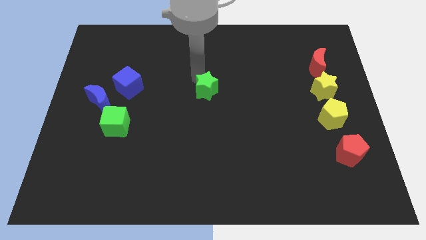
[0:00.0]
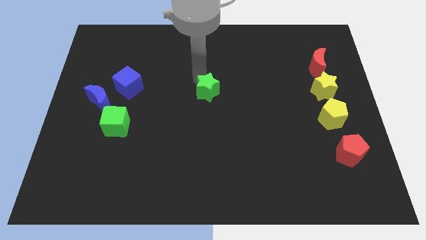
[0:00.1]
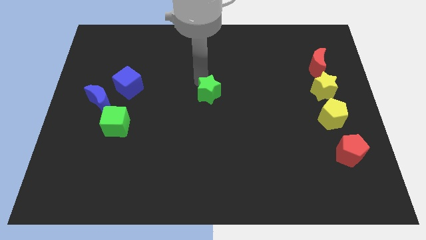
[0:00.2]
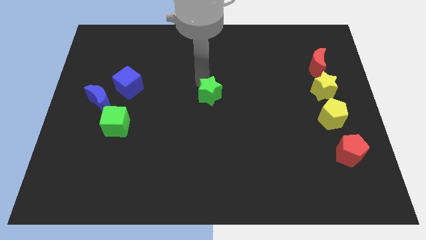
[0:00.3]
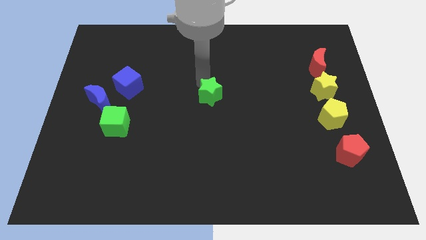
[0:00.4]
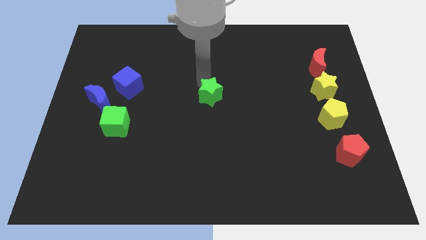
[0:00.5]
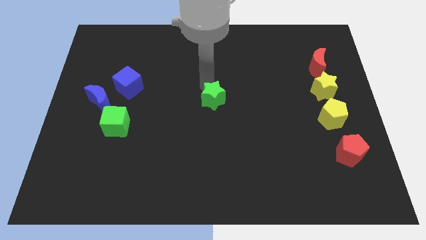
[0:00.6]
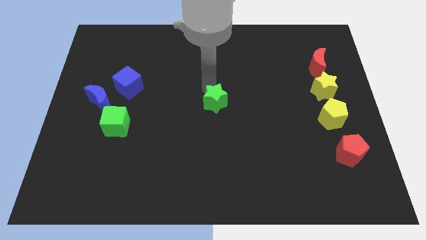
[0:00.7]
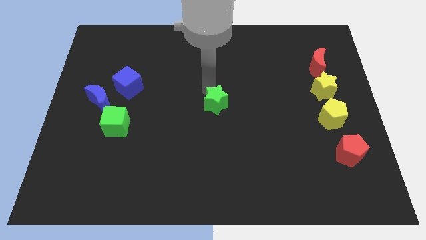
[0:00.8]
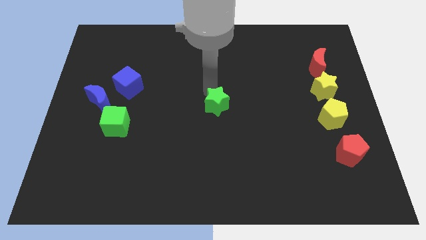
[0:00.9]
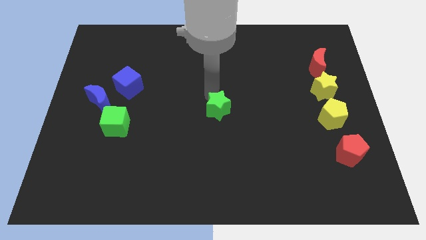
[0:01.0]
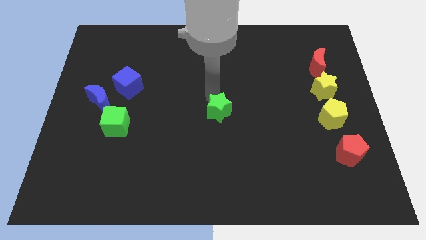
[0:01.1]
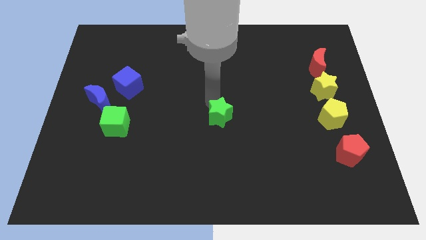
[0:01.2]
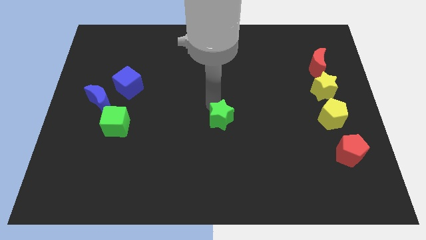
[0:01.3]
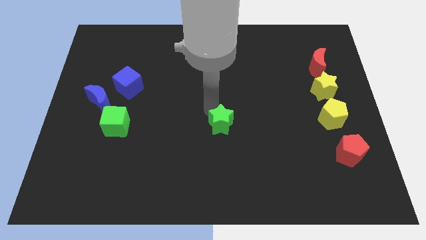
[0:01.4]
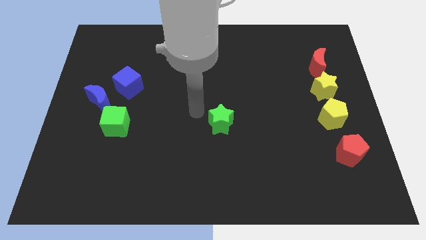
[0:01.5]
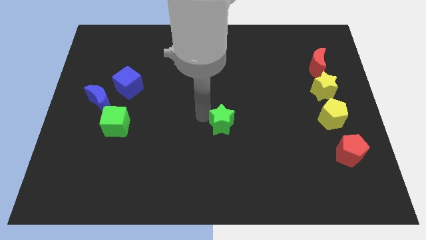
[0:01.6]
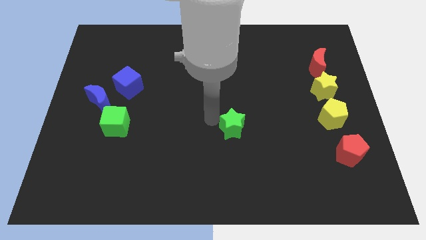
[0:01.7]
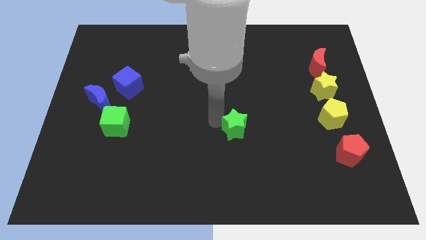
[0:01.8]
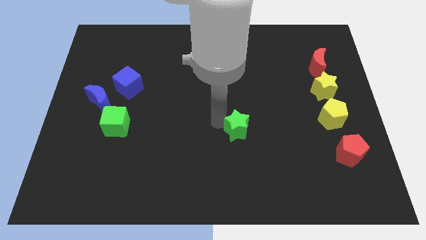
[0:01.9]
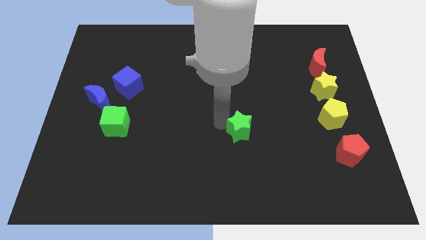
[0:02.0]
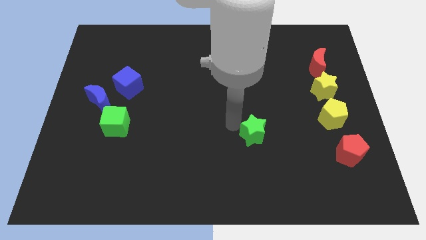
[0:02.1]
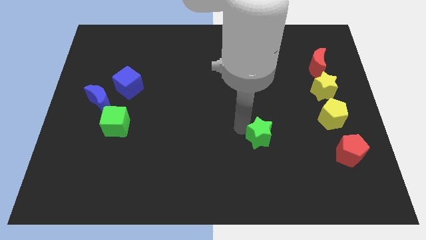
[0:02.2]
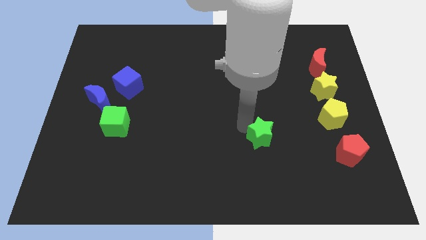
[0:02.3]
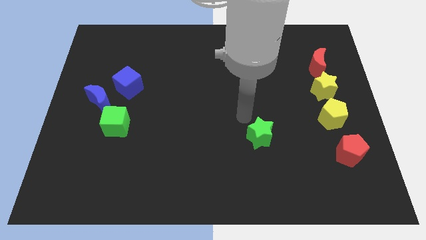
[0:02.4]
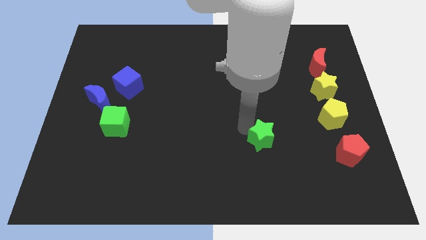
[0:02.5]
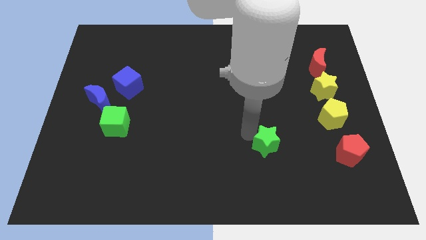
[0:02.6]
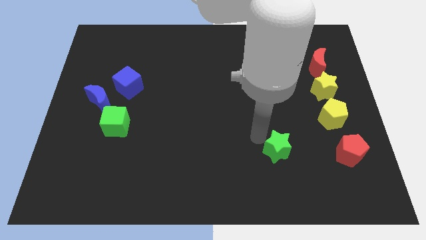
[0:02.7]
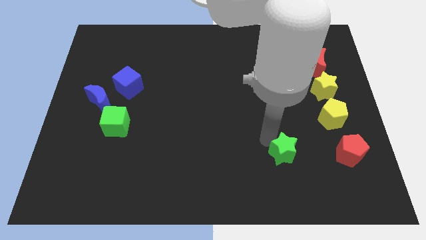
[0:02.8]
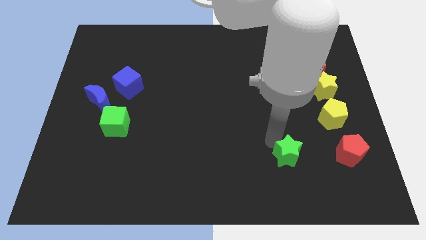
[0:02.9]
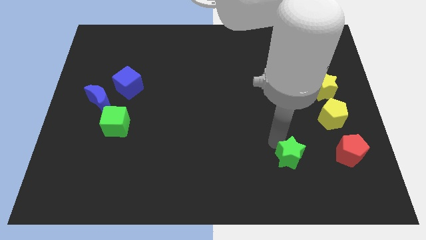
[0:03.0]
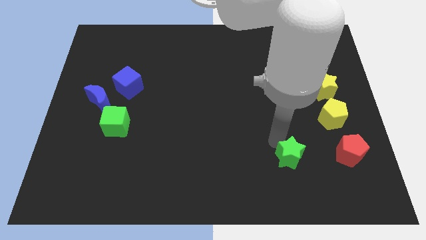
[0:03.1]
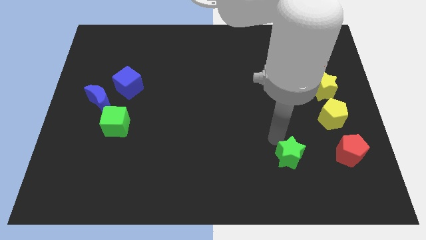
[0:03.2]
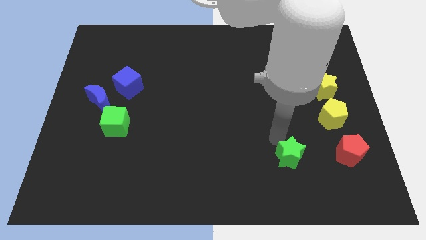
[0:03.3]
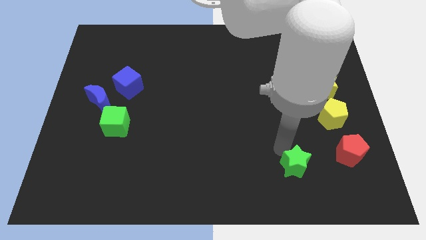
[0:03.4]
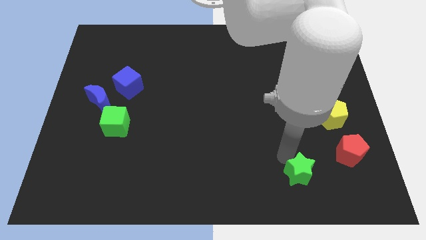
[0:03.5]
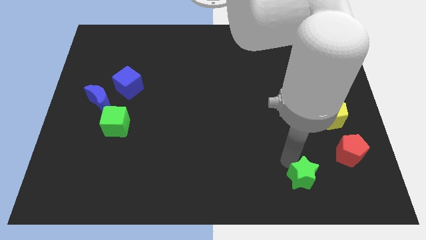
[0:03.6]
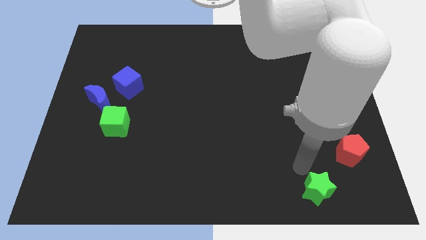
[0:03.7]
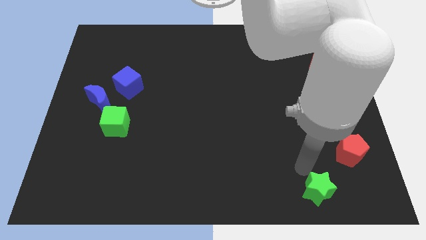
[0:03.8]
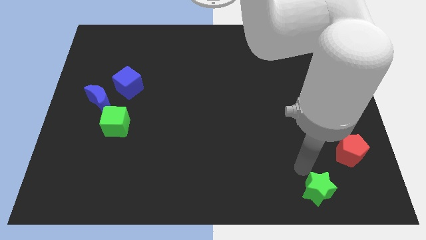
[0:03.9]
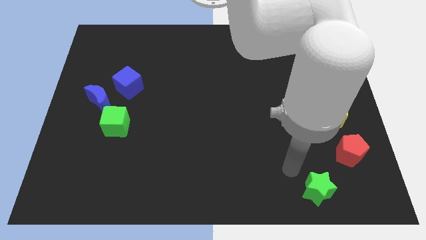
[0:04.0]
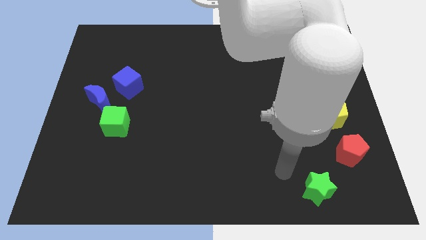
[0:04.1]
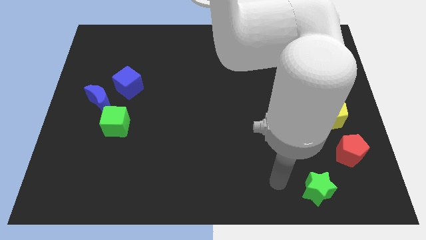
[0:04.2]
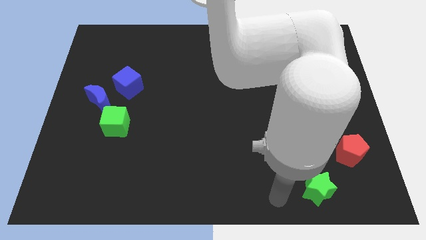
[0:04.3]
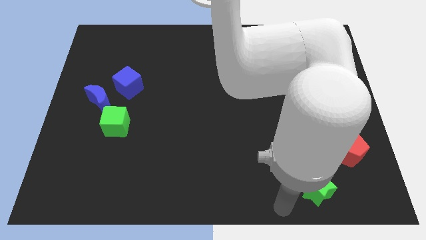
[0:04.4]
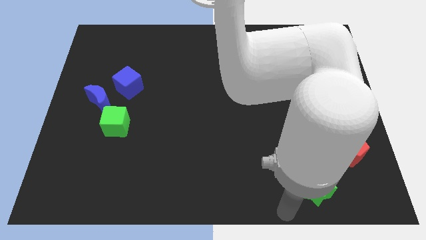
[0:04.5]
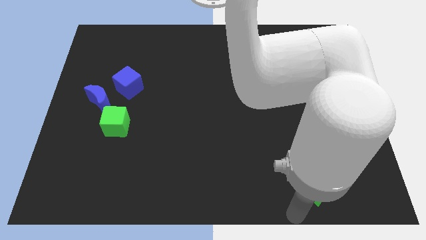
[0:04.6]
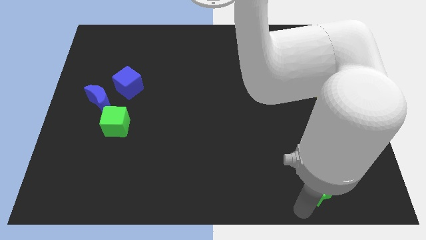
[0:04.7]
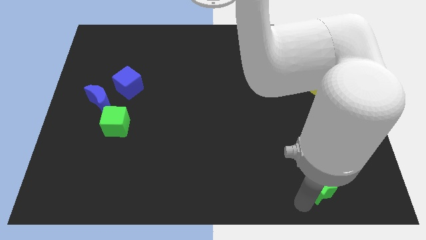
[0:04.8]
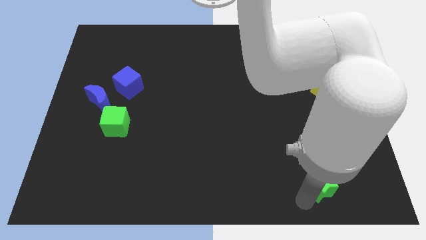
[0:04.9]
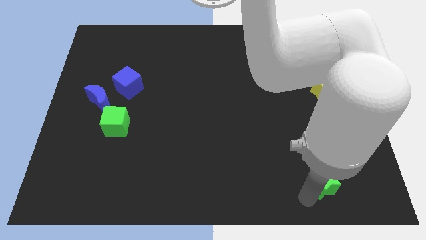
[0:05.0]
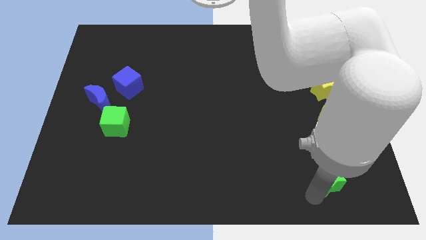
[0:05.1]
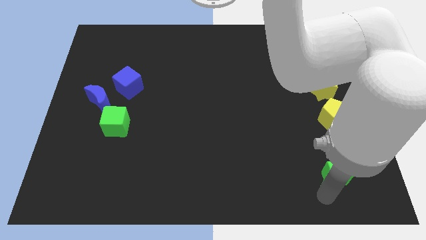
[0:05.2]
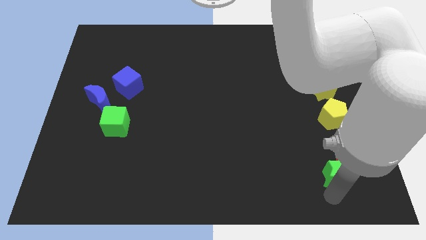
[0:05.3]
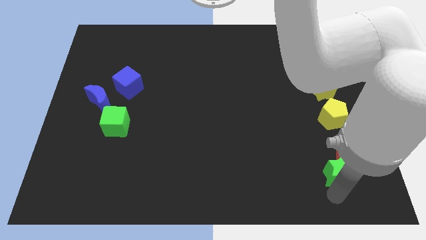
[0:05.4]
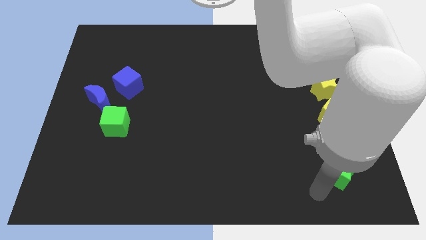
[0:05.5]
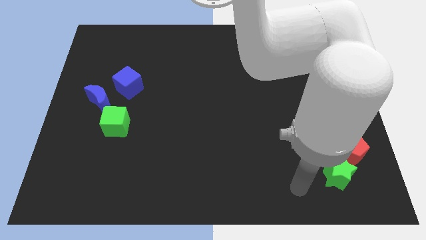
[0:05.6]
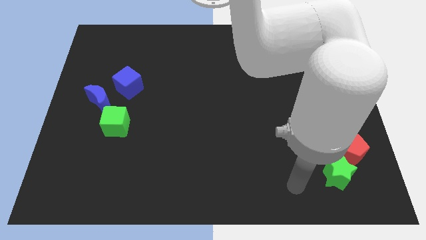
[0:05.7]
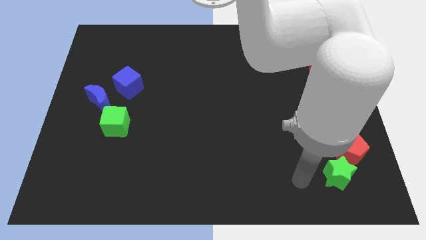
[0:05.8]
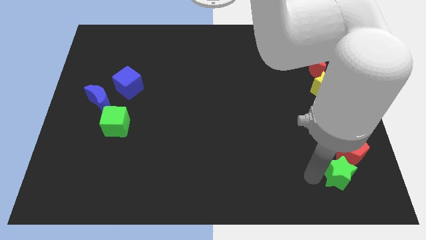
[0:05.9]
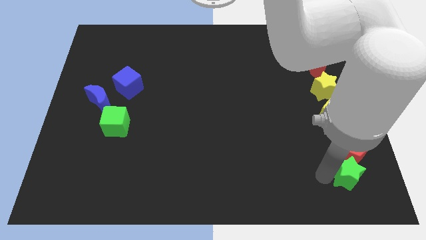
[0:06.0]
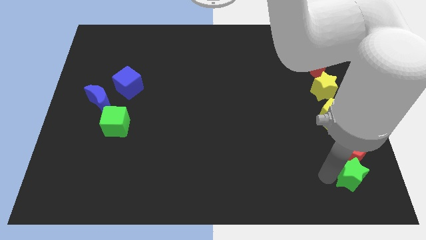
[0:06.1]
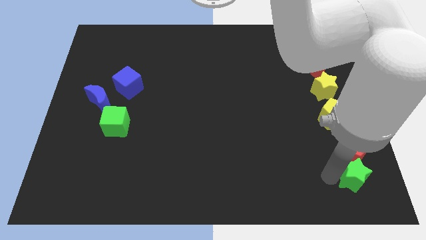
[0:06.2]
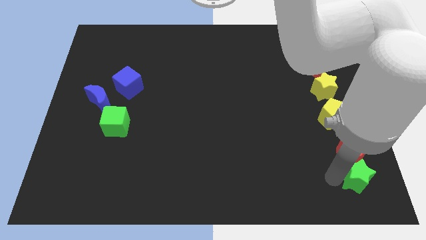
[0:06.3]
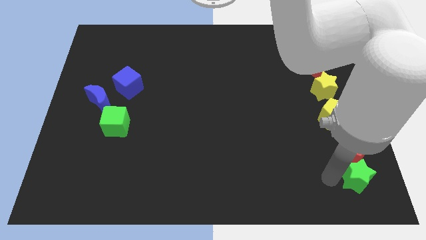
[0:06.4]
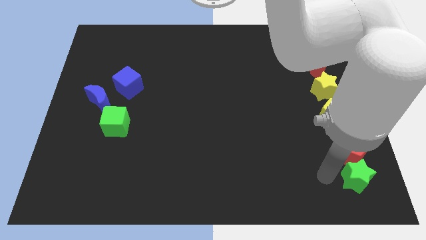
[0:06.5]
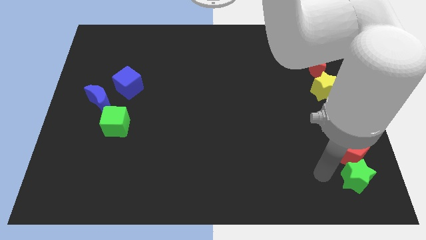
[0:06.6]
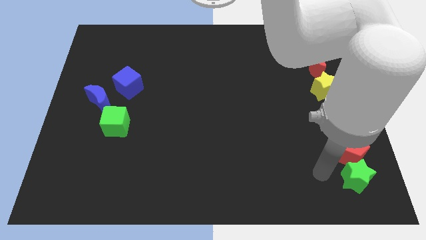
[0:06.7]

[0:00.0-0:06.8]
place the green star below the red pentagon

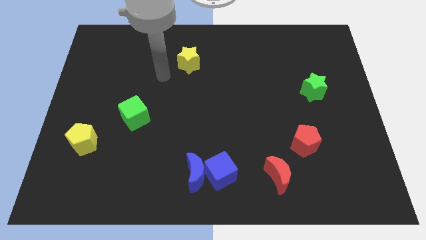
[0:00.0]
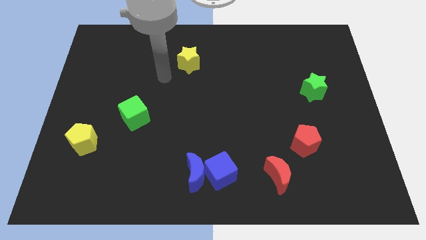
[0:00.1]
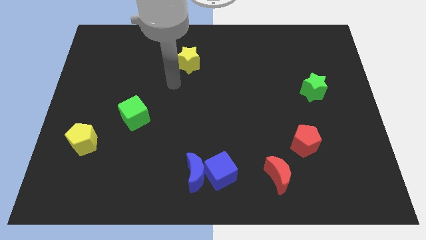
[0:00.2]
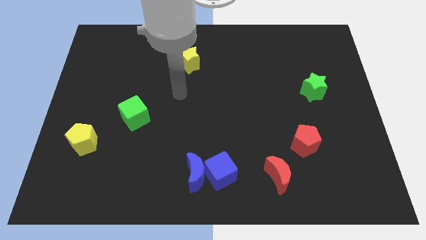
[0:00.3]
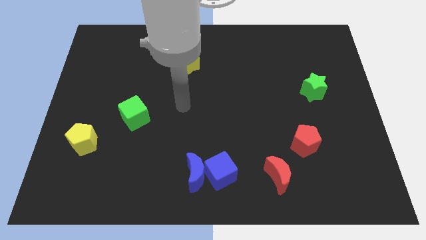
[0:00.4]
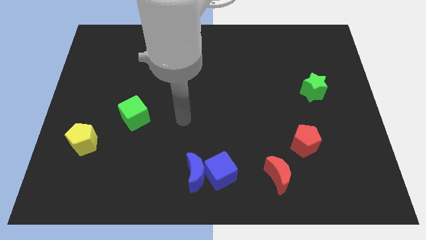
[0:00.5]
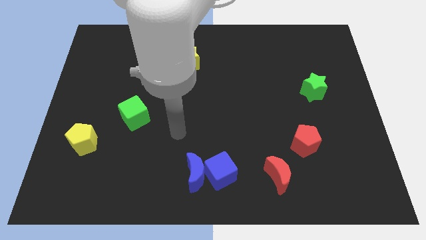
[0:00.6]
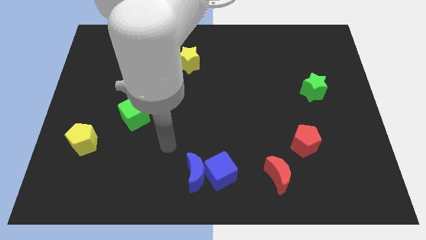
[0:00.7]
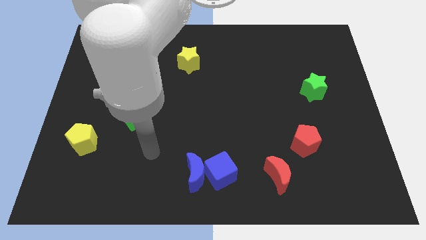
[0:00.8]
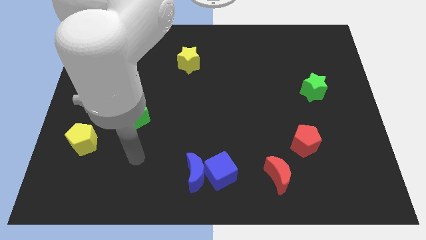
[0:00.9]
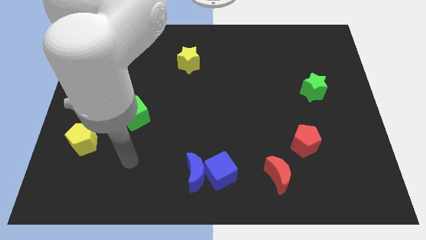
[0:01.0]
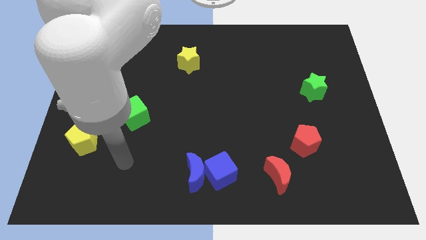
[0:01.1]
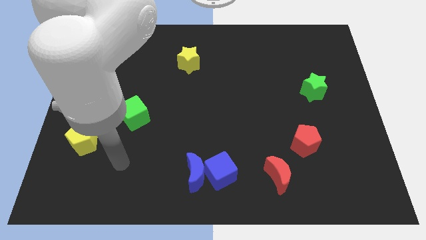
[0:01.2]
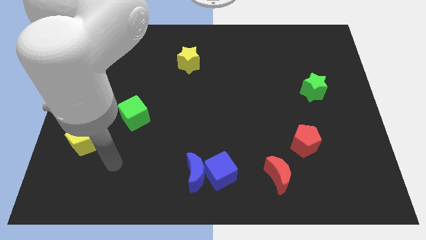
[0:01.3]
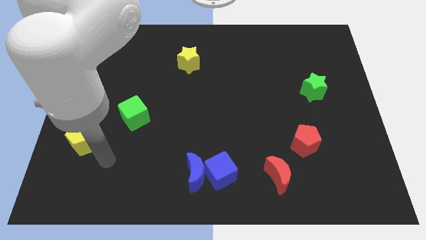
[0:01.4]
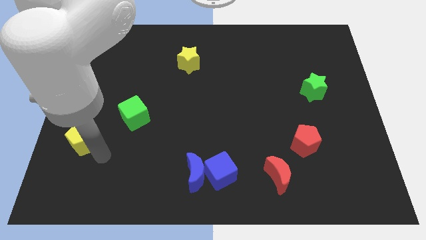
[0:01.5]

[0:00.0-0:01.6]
move arm below the yellow pentagon

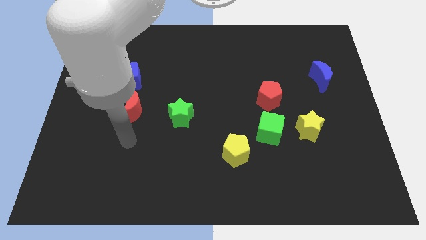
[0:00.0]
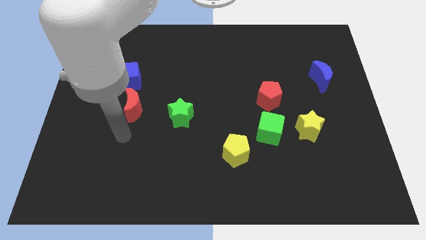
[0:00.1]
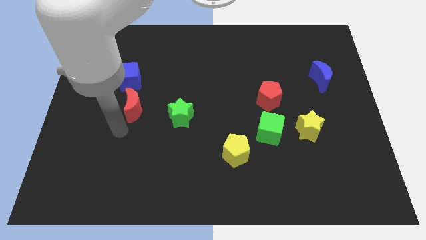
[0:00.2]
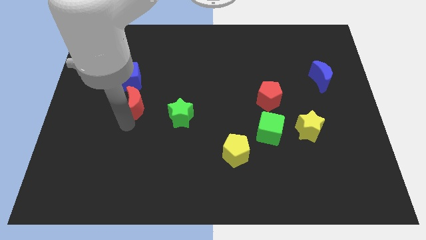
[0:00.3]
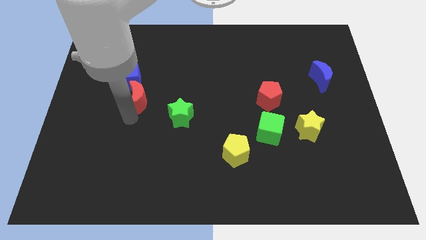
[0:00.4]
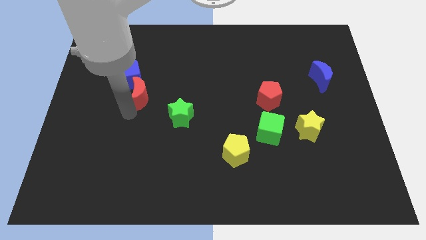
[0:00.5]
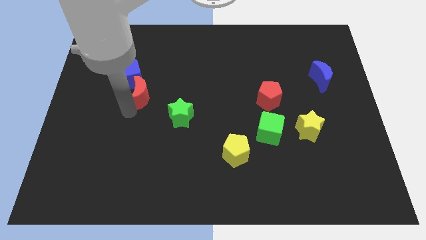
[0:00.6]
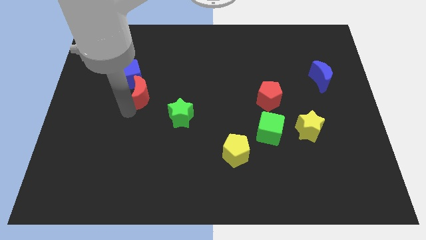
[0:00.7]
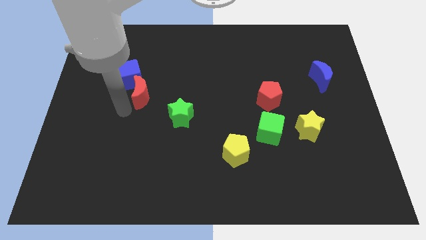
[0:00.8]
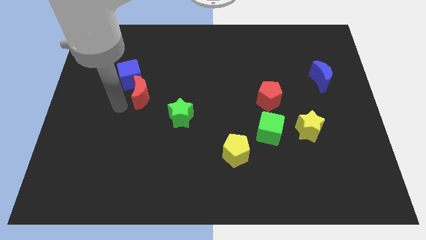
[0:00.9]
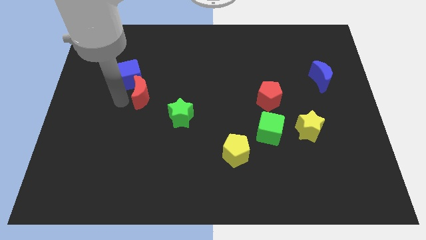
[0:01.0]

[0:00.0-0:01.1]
slide red moon into blue cube
